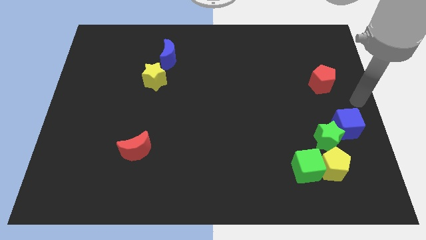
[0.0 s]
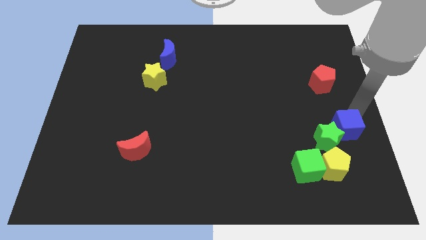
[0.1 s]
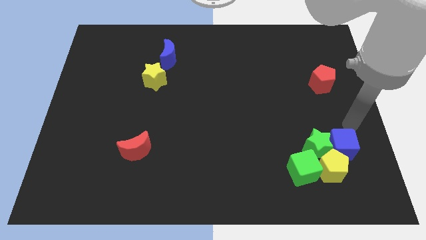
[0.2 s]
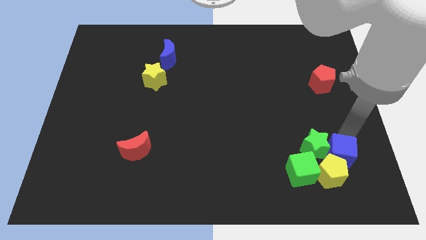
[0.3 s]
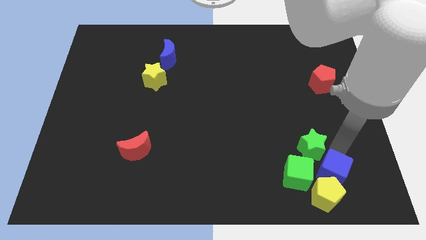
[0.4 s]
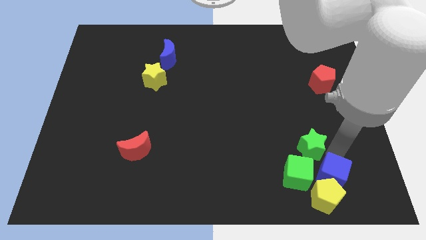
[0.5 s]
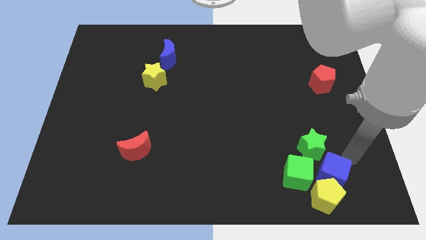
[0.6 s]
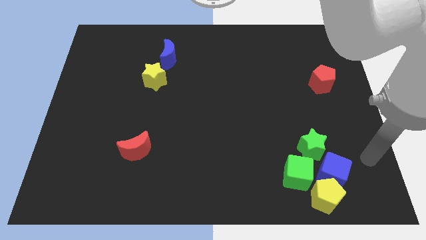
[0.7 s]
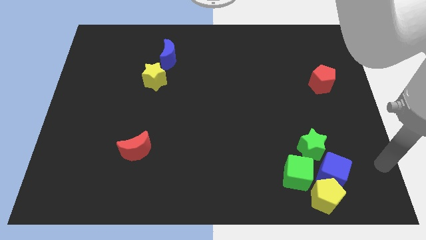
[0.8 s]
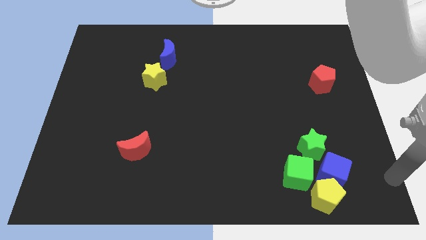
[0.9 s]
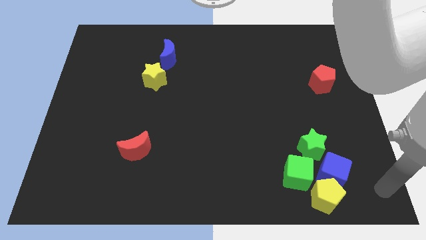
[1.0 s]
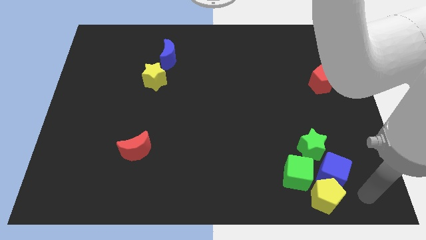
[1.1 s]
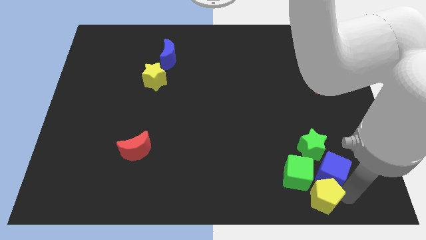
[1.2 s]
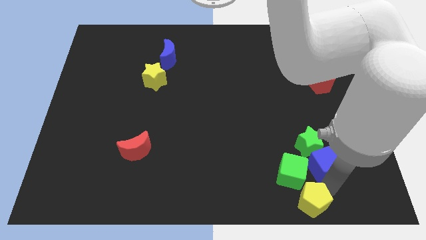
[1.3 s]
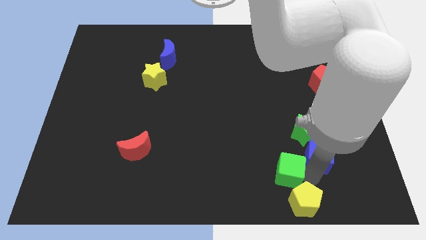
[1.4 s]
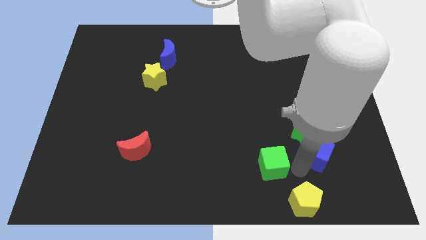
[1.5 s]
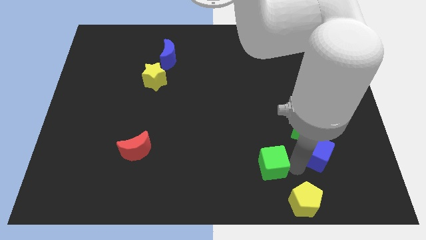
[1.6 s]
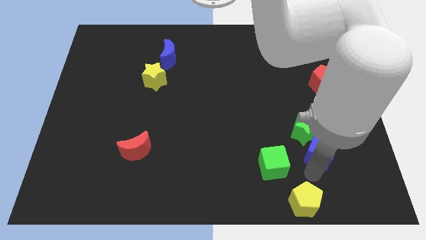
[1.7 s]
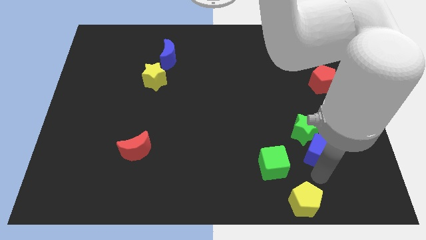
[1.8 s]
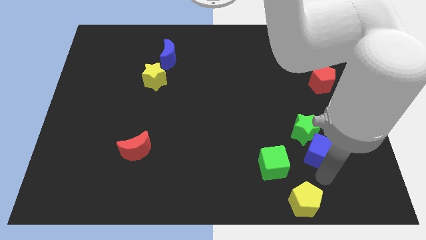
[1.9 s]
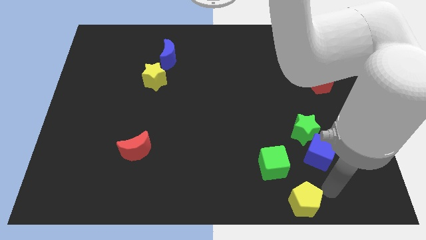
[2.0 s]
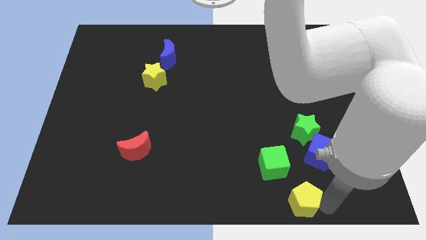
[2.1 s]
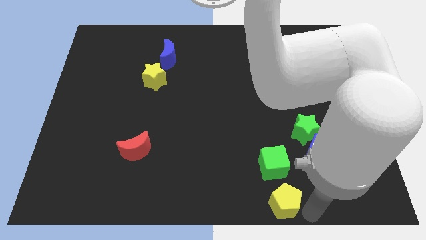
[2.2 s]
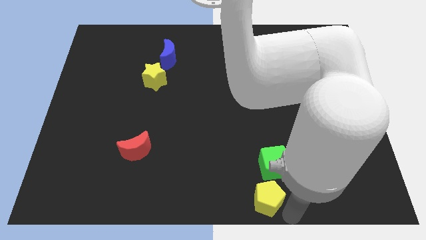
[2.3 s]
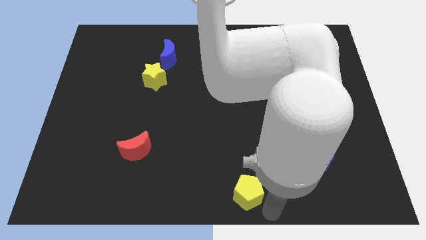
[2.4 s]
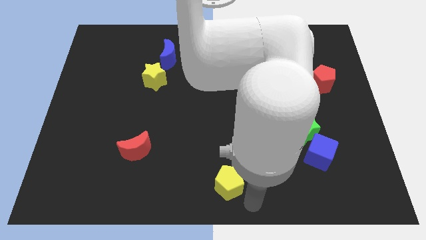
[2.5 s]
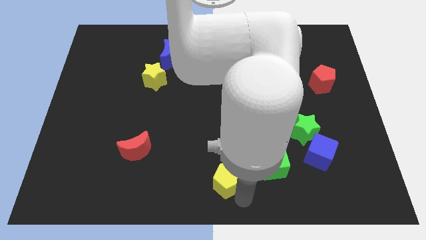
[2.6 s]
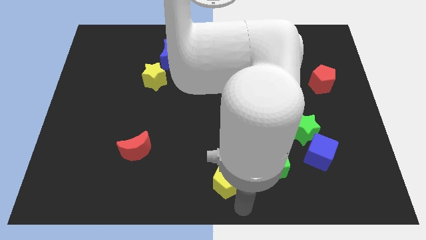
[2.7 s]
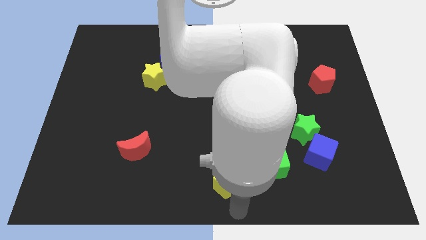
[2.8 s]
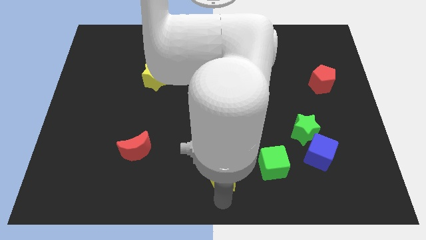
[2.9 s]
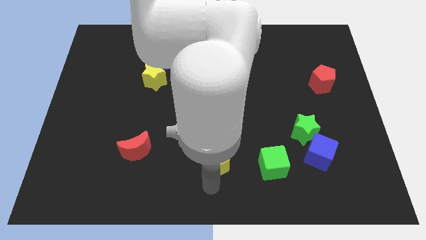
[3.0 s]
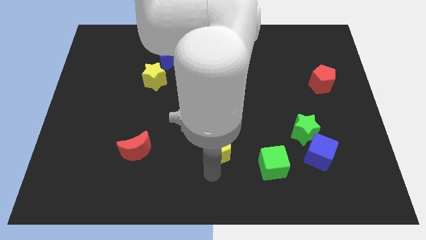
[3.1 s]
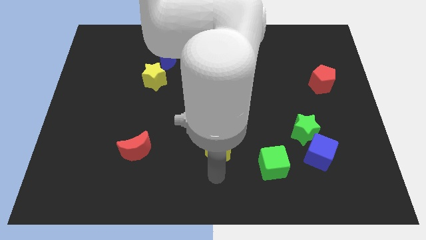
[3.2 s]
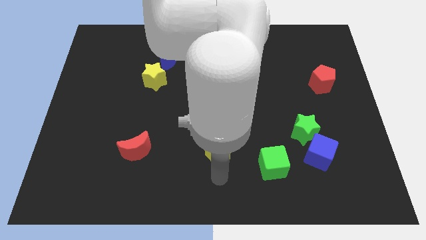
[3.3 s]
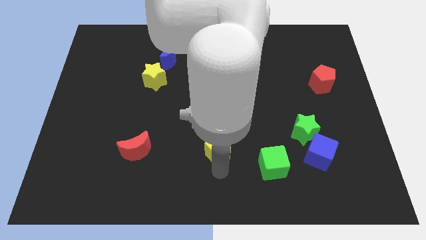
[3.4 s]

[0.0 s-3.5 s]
push the yellow pentagon and blue cube horizontally to the right side of the red crescent

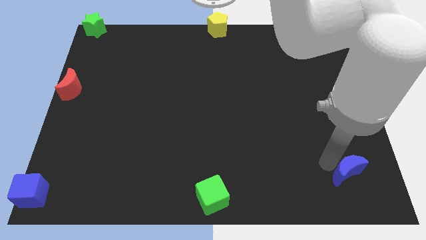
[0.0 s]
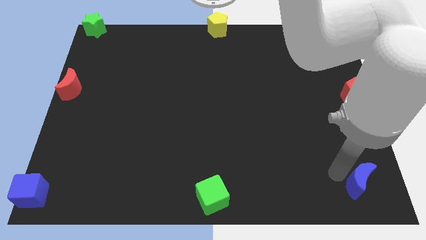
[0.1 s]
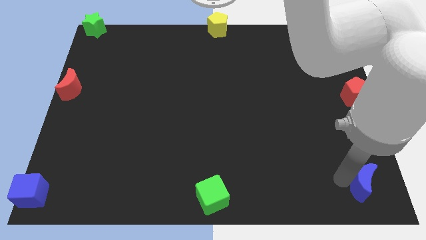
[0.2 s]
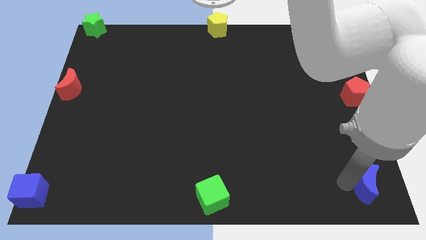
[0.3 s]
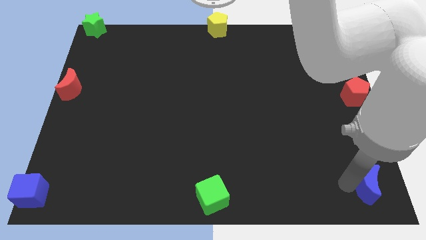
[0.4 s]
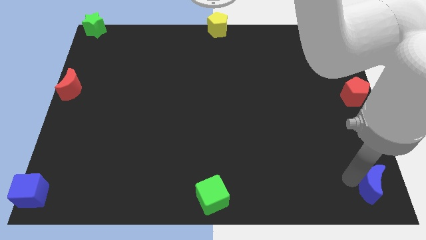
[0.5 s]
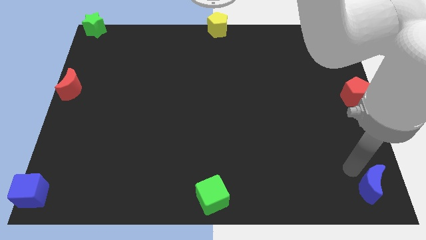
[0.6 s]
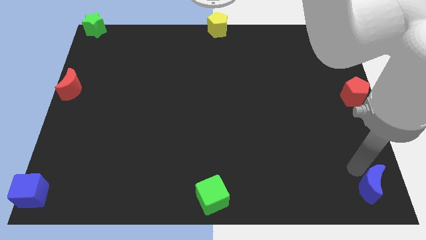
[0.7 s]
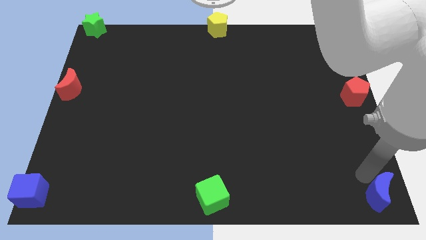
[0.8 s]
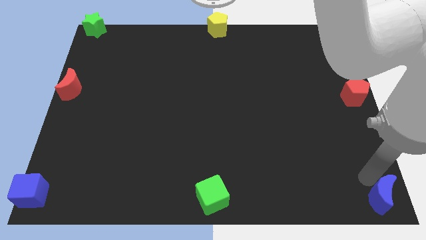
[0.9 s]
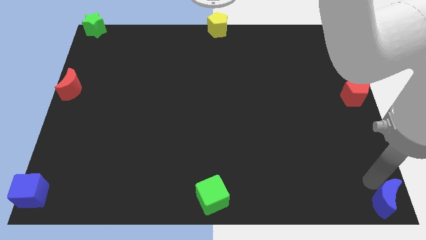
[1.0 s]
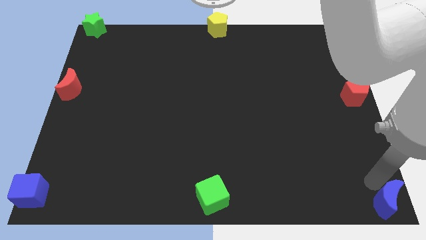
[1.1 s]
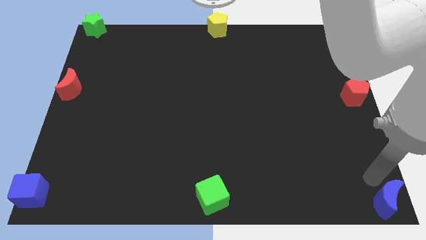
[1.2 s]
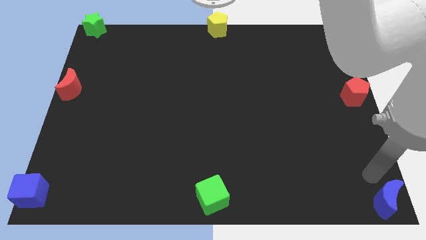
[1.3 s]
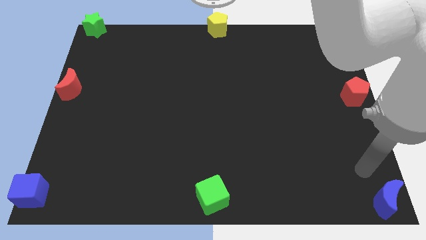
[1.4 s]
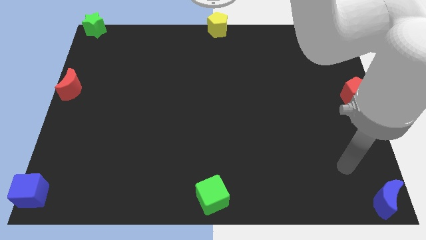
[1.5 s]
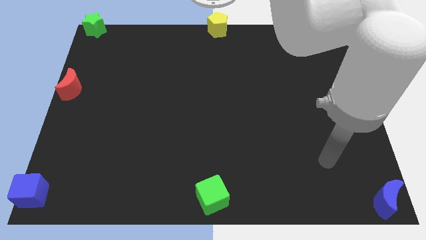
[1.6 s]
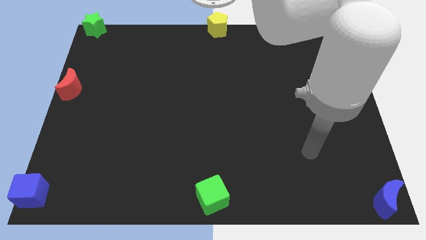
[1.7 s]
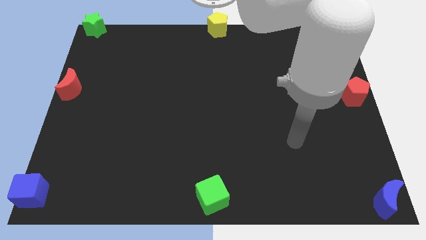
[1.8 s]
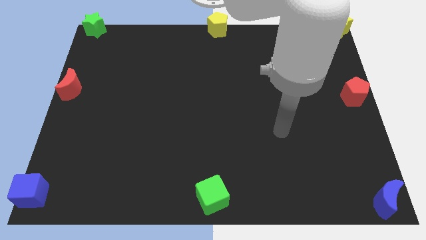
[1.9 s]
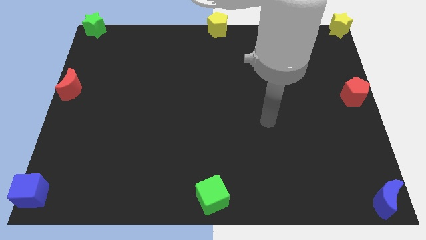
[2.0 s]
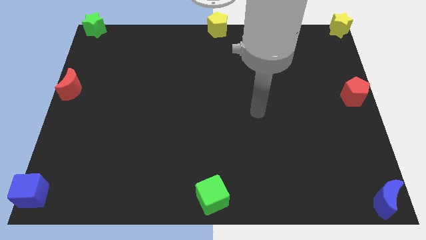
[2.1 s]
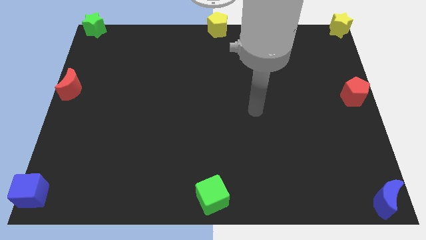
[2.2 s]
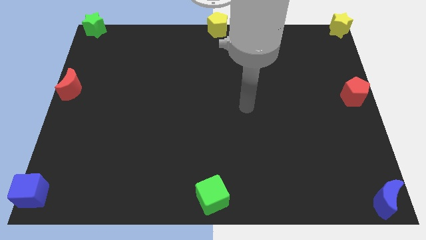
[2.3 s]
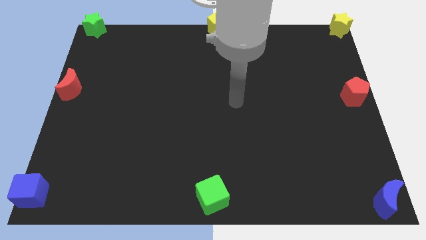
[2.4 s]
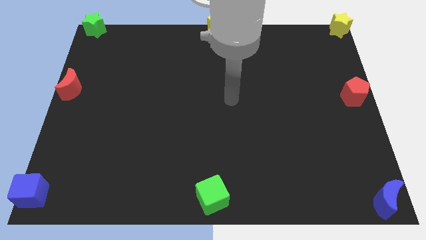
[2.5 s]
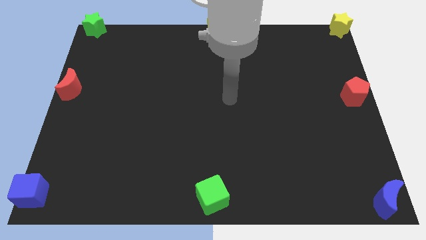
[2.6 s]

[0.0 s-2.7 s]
place the blue crescent at the bottom right corner of the board

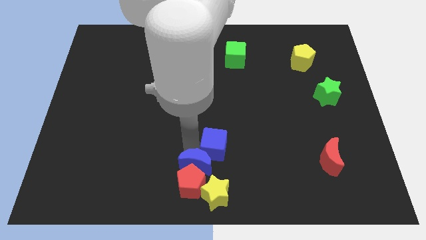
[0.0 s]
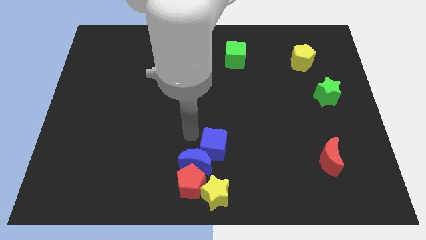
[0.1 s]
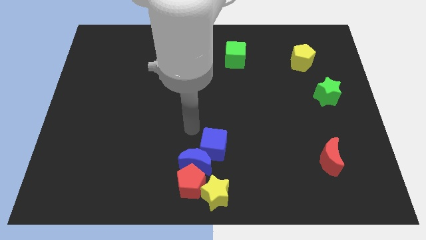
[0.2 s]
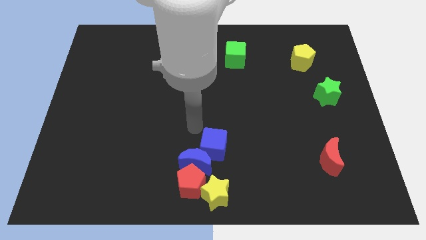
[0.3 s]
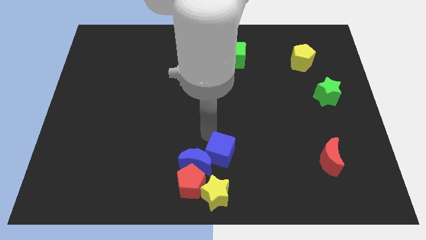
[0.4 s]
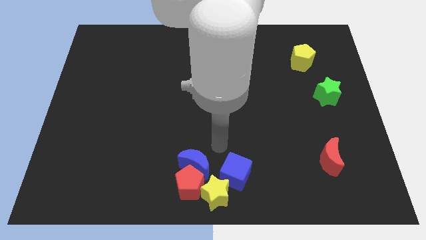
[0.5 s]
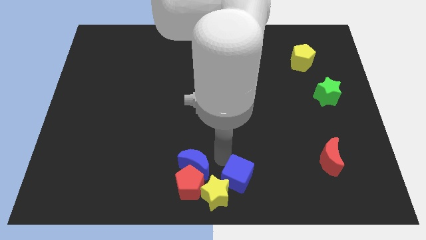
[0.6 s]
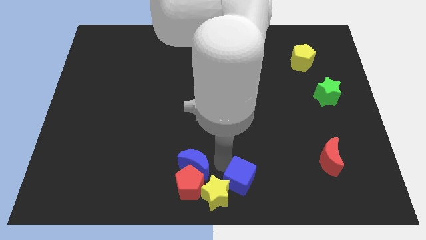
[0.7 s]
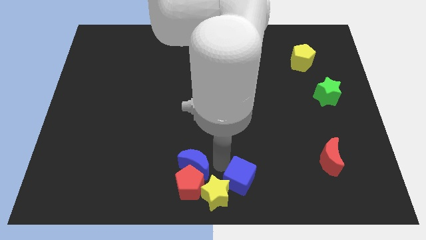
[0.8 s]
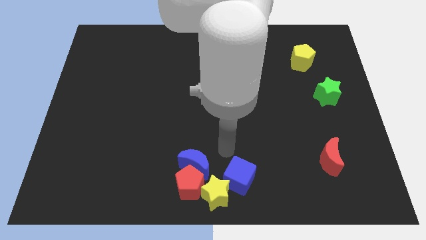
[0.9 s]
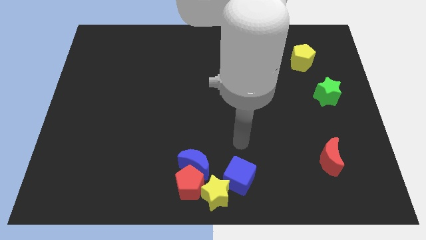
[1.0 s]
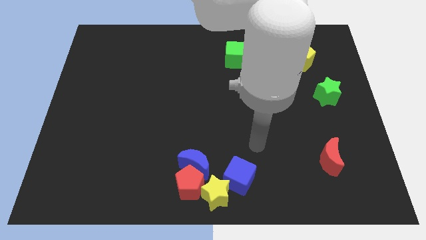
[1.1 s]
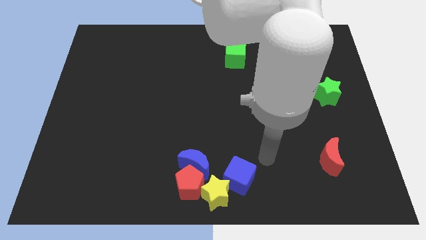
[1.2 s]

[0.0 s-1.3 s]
move the blue cube to the top right of the yellow star

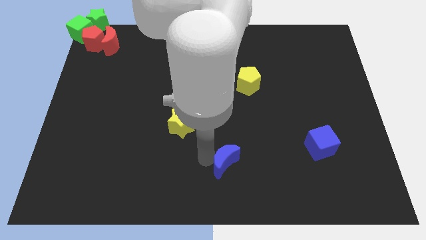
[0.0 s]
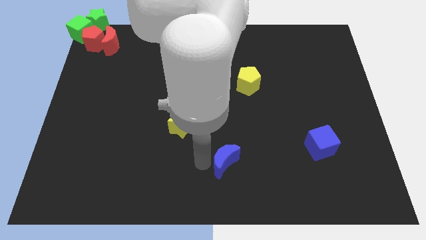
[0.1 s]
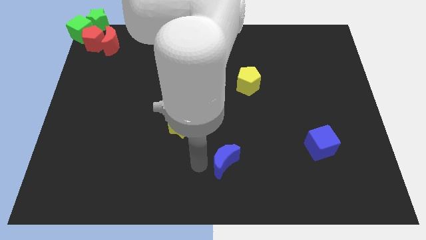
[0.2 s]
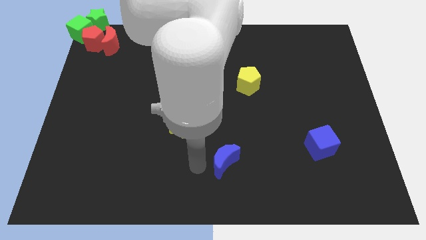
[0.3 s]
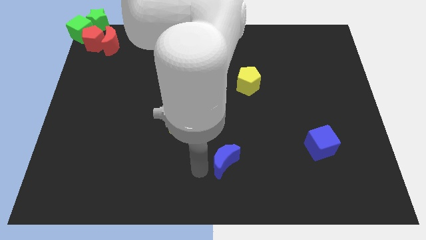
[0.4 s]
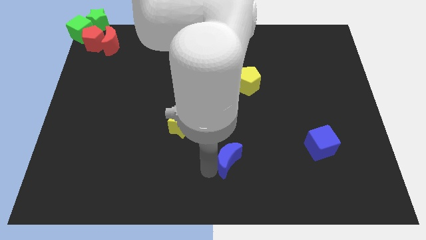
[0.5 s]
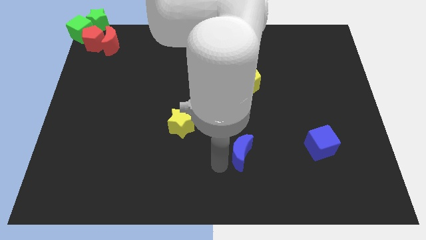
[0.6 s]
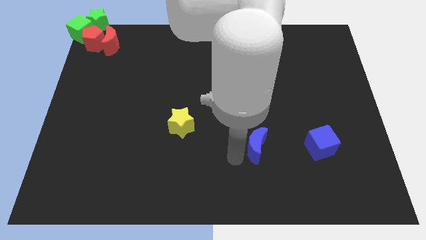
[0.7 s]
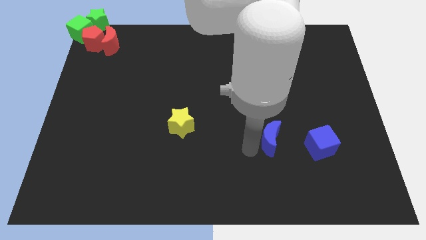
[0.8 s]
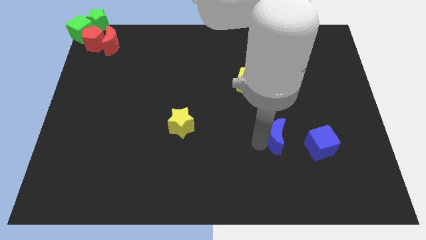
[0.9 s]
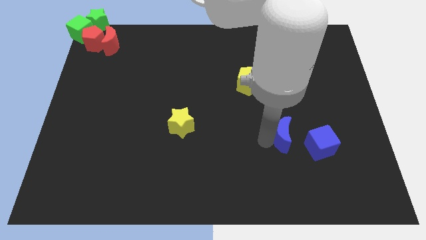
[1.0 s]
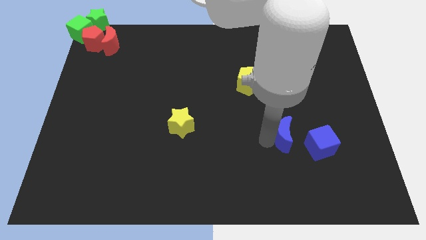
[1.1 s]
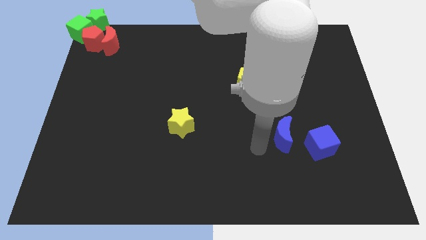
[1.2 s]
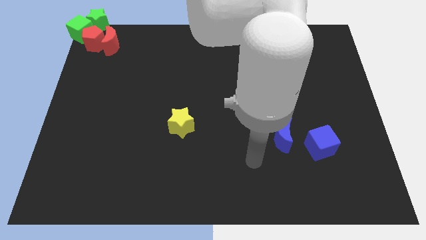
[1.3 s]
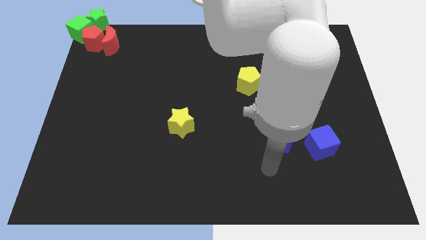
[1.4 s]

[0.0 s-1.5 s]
move the blue moon at the top left side blue cube
